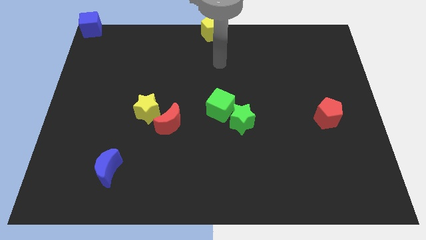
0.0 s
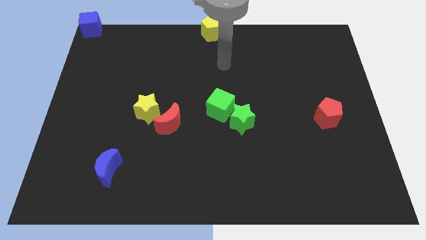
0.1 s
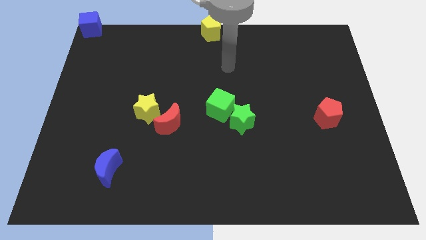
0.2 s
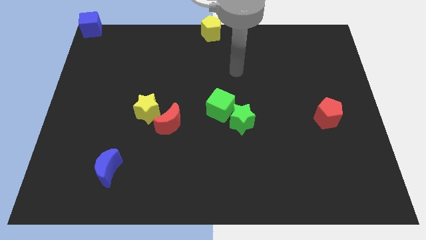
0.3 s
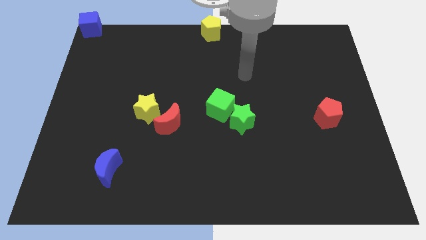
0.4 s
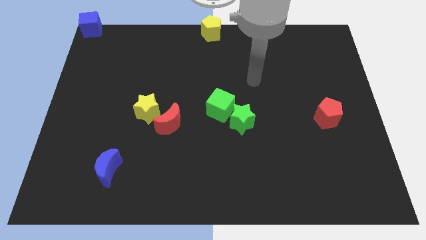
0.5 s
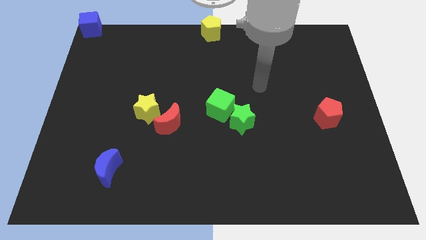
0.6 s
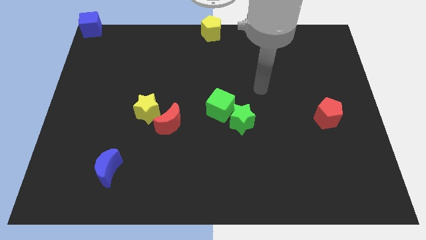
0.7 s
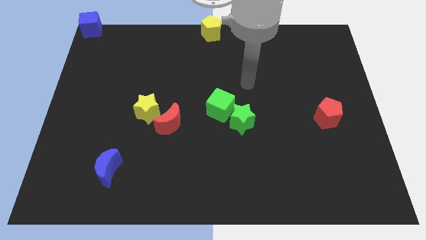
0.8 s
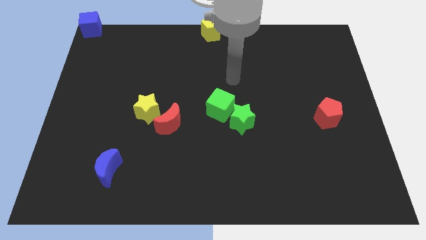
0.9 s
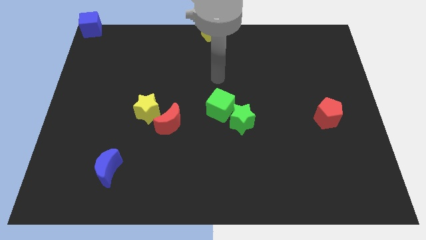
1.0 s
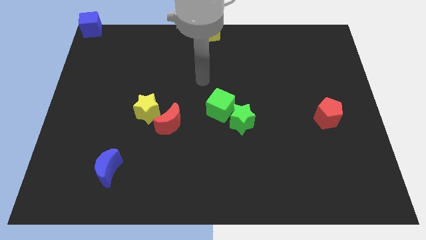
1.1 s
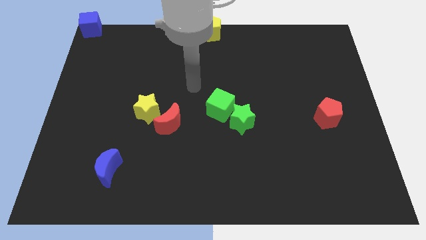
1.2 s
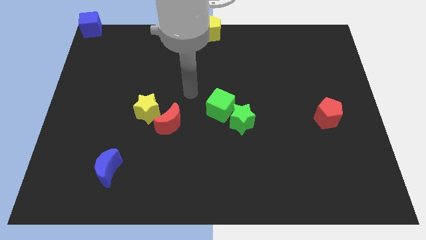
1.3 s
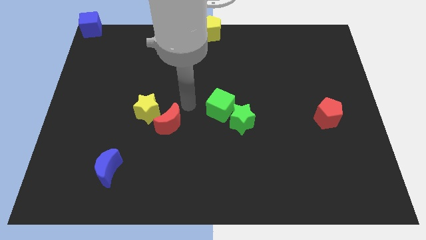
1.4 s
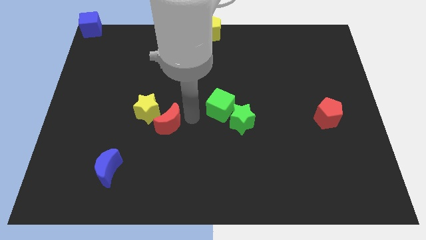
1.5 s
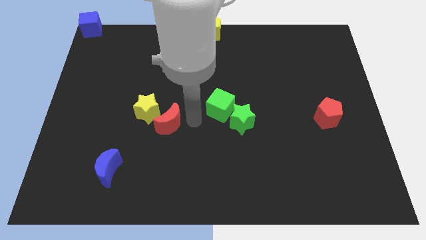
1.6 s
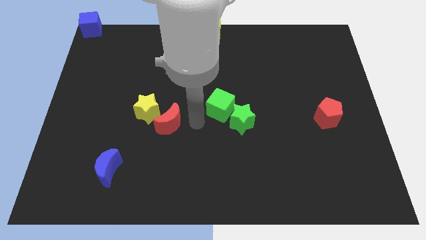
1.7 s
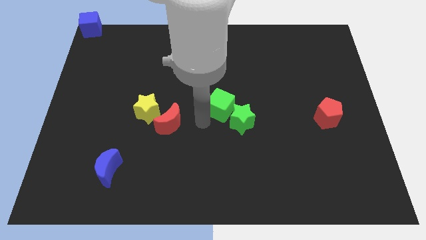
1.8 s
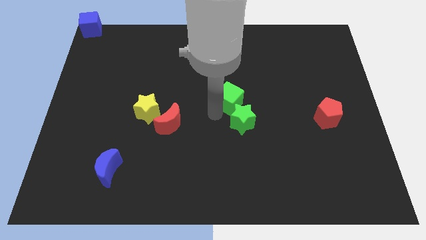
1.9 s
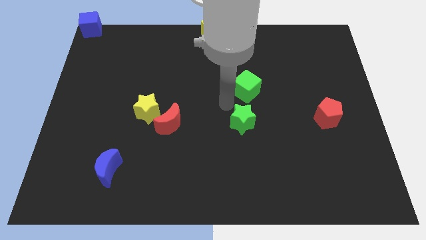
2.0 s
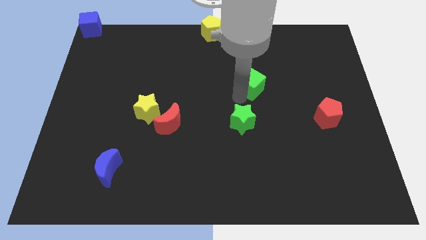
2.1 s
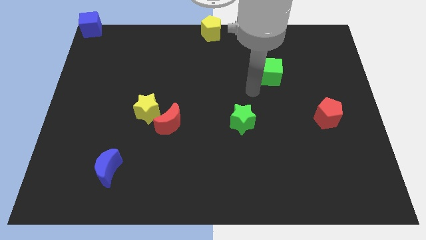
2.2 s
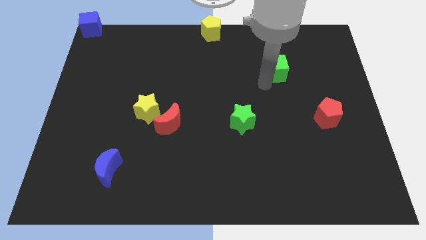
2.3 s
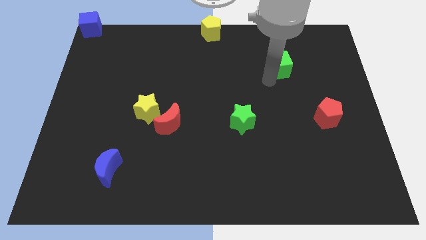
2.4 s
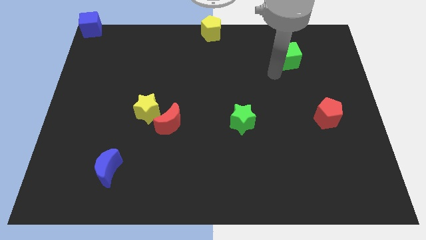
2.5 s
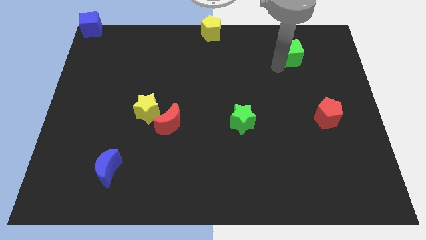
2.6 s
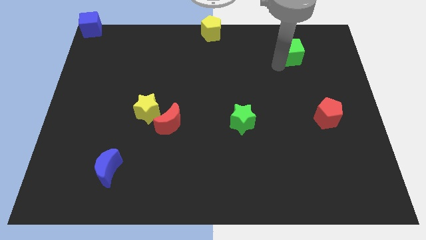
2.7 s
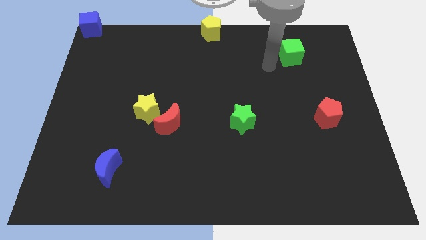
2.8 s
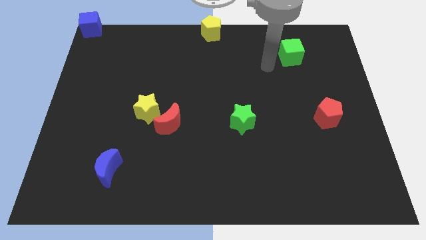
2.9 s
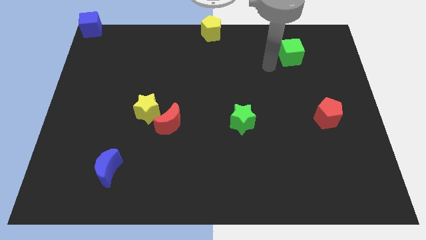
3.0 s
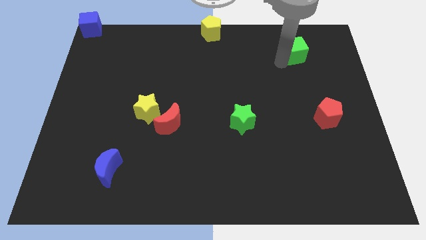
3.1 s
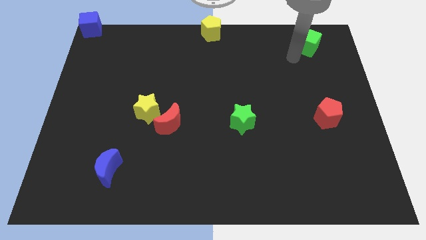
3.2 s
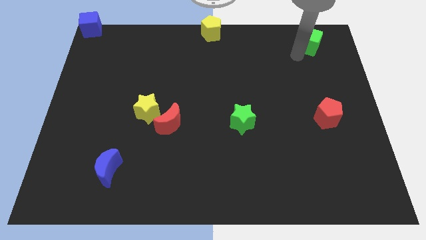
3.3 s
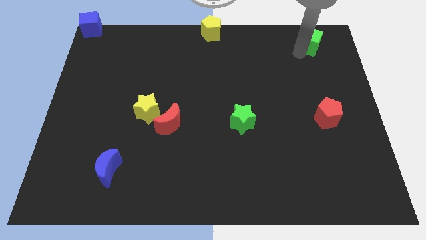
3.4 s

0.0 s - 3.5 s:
separate the green cube from the green star

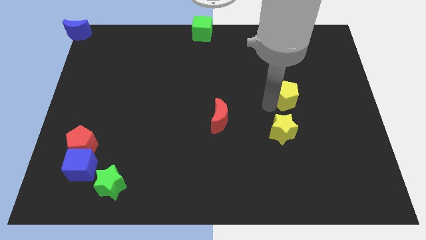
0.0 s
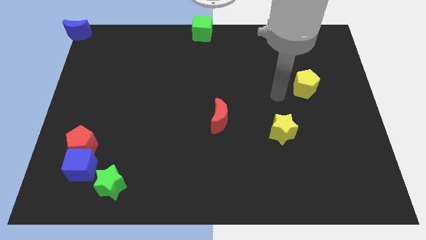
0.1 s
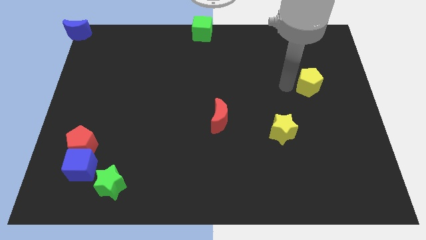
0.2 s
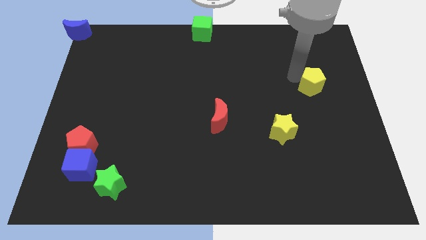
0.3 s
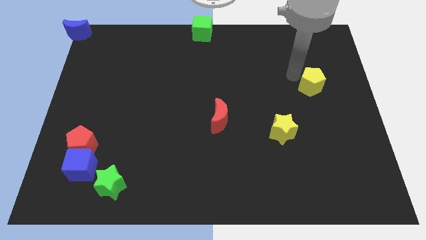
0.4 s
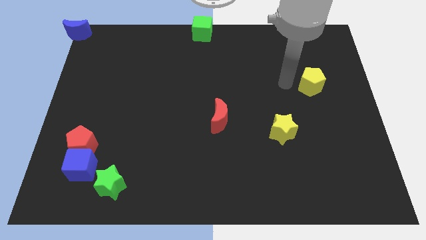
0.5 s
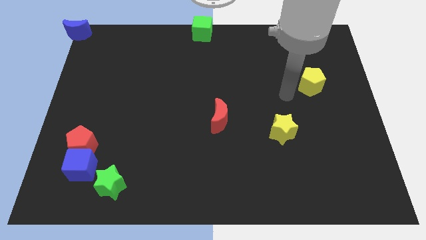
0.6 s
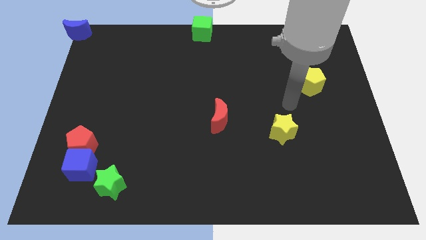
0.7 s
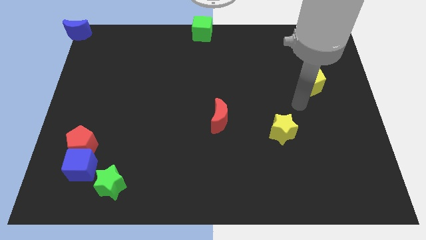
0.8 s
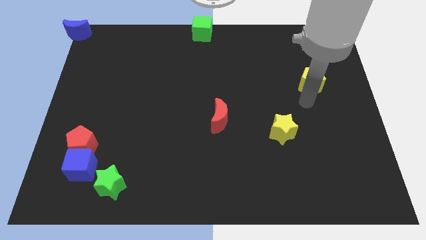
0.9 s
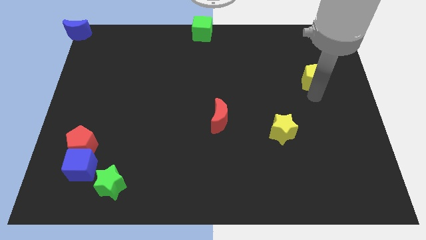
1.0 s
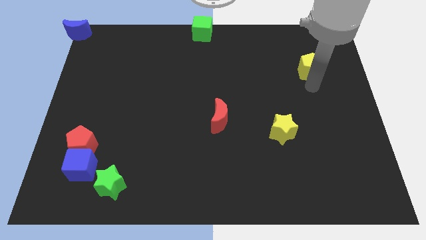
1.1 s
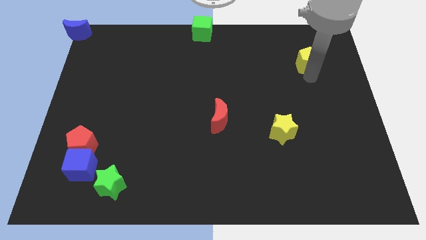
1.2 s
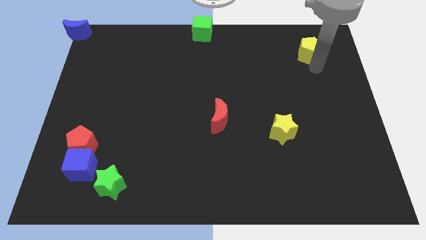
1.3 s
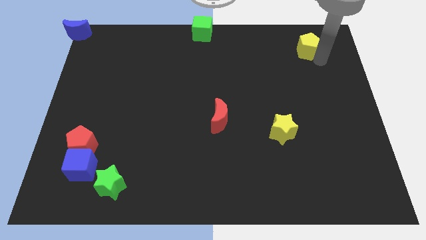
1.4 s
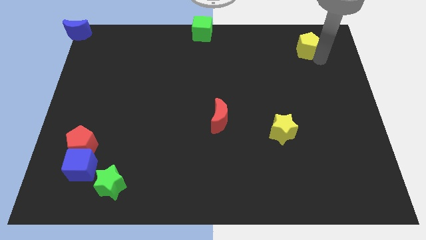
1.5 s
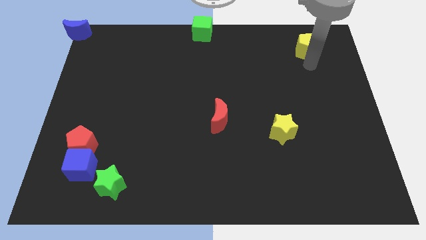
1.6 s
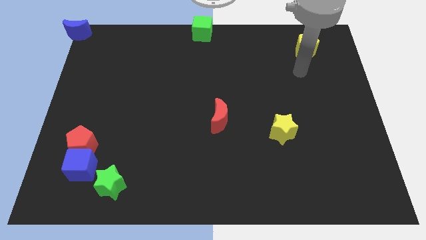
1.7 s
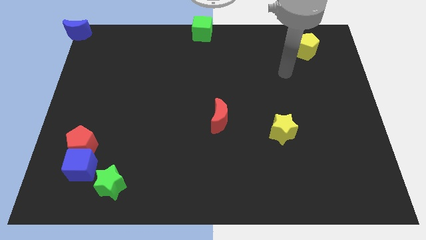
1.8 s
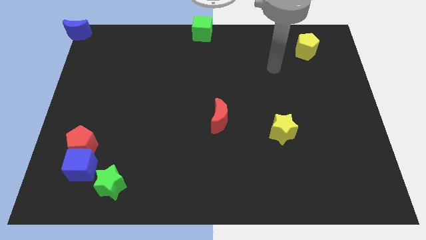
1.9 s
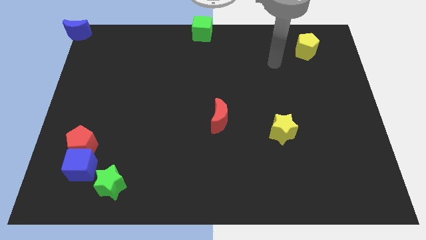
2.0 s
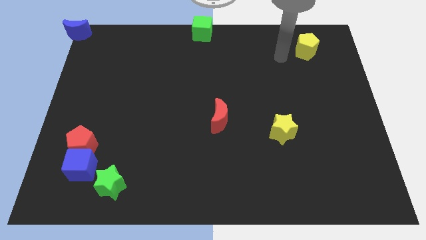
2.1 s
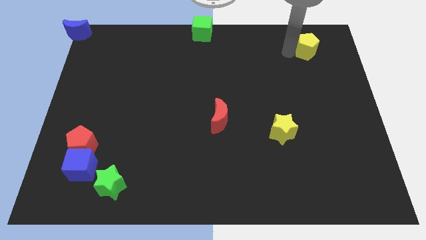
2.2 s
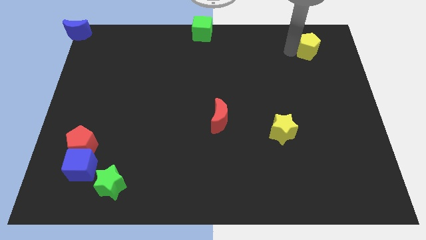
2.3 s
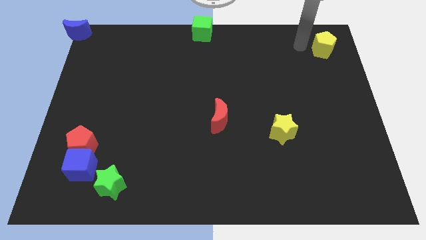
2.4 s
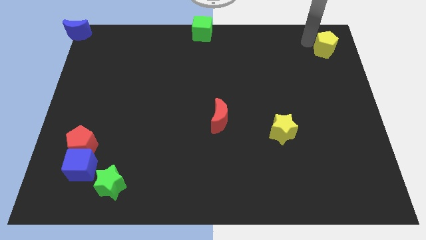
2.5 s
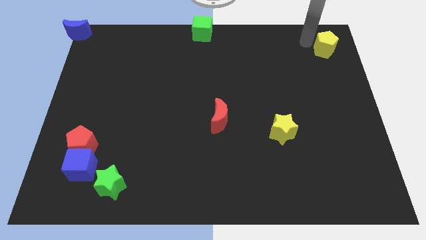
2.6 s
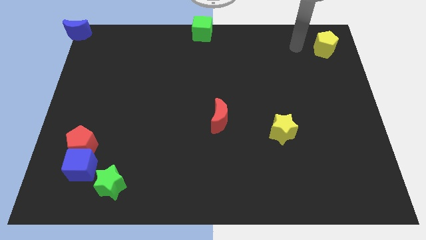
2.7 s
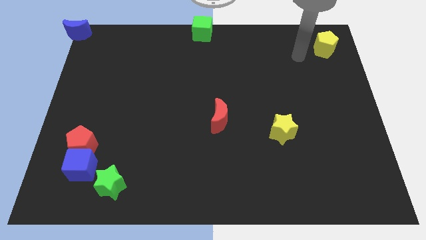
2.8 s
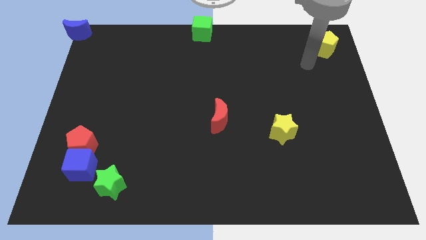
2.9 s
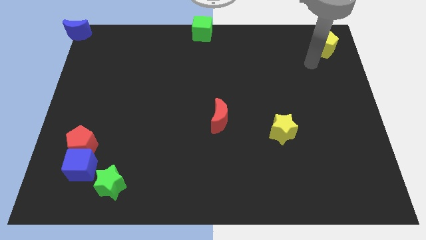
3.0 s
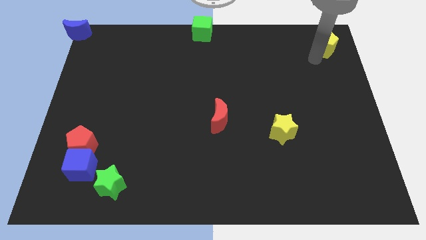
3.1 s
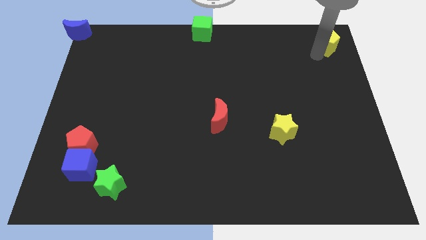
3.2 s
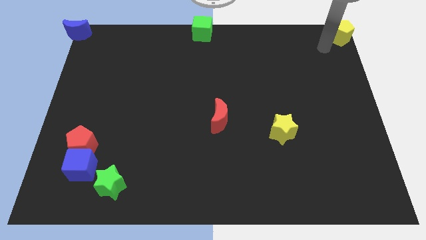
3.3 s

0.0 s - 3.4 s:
move the yellow pentagon to the top right of the board

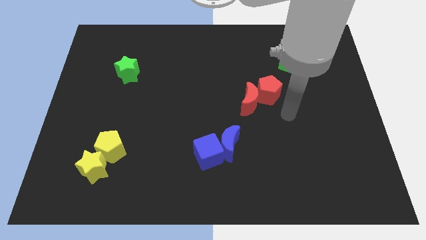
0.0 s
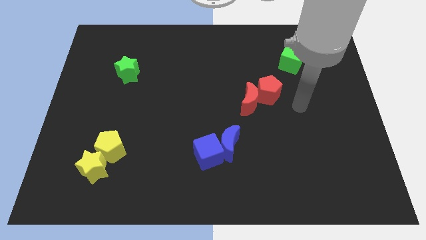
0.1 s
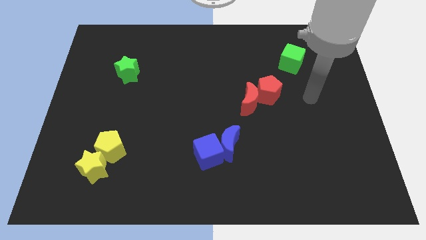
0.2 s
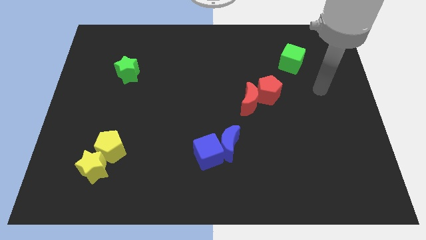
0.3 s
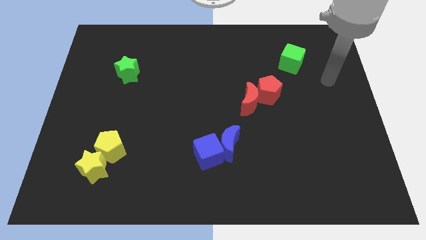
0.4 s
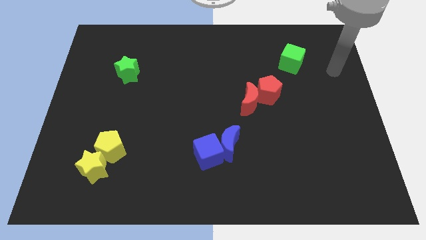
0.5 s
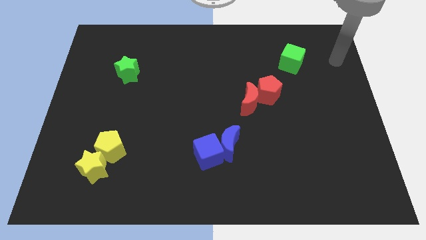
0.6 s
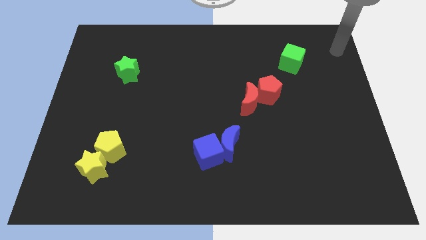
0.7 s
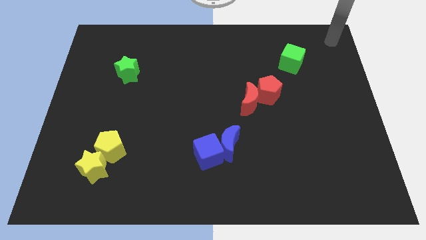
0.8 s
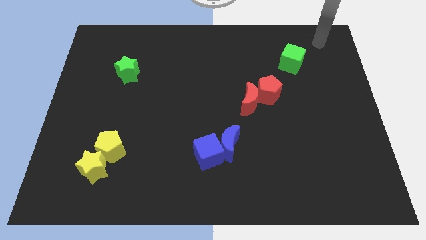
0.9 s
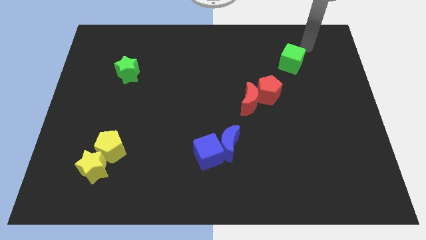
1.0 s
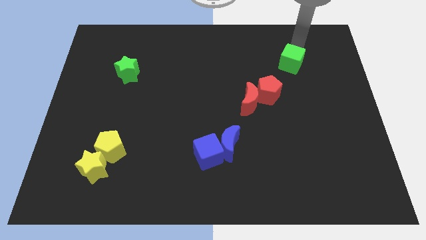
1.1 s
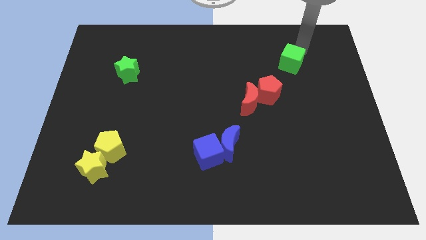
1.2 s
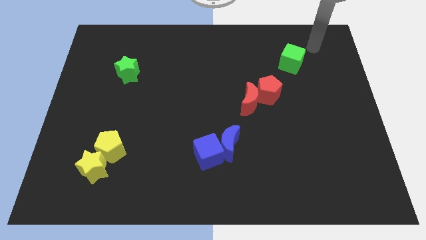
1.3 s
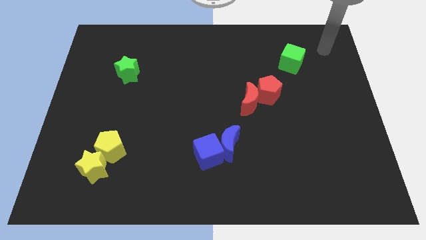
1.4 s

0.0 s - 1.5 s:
point your hand at the top right side of the green cube

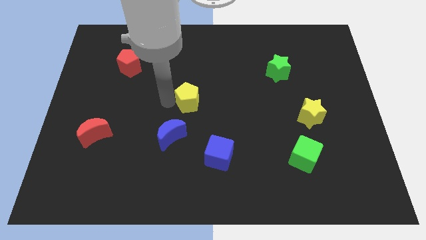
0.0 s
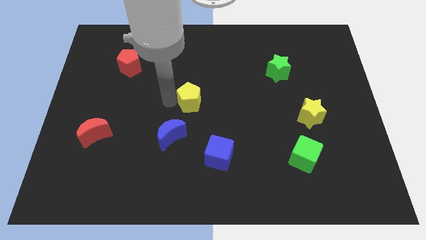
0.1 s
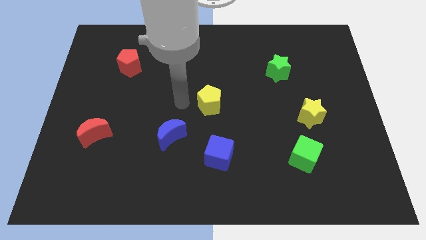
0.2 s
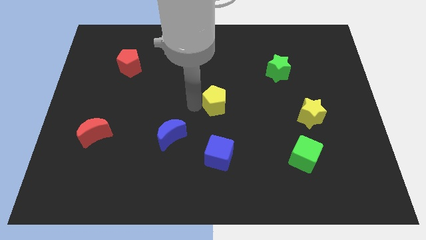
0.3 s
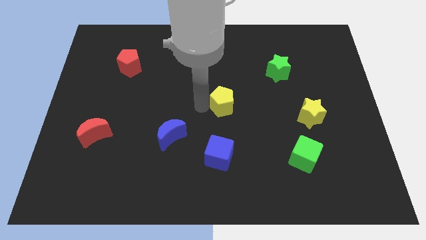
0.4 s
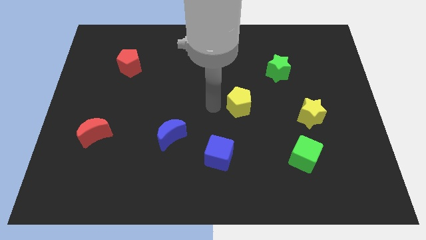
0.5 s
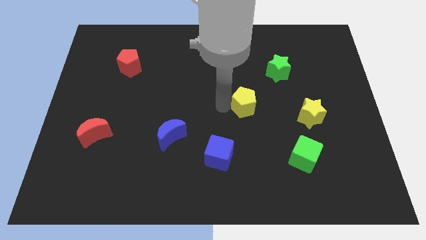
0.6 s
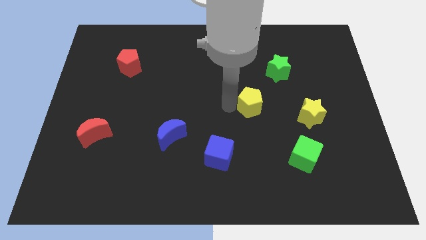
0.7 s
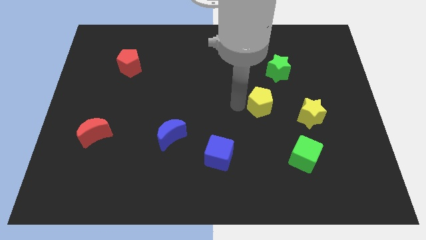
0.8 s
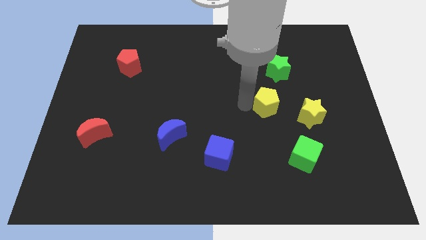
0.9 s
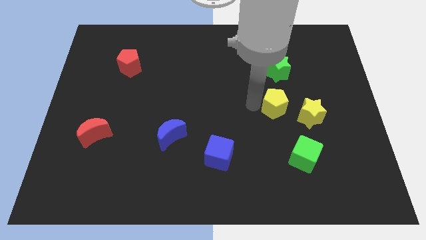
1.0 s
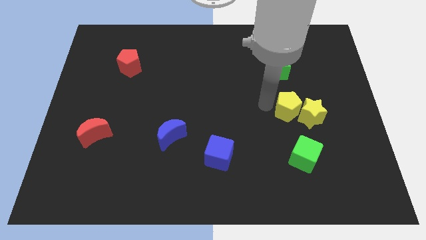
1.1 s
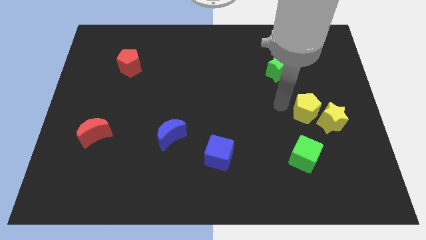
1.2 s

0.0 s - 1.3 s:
push the yellow pentagon into the yellow star
